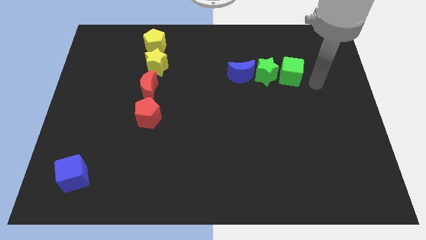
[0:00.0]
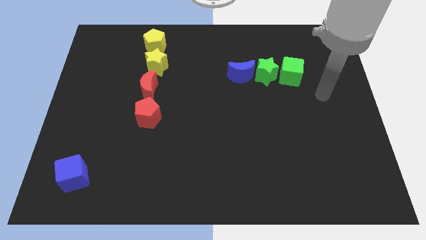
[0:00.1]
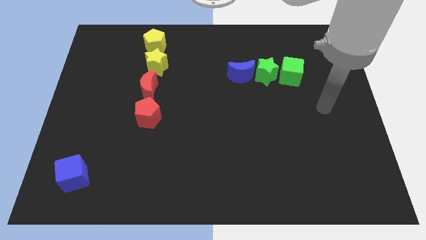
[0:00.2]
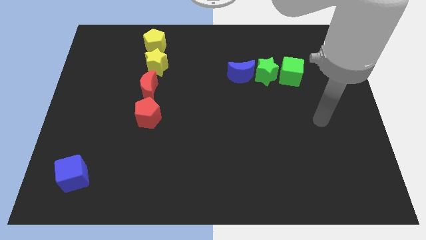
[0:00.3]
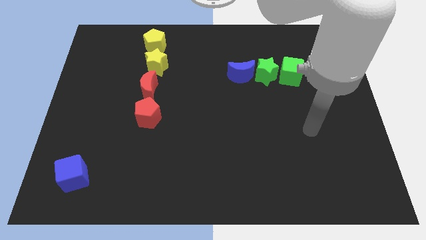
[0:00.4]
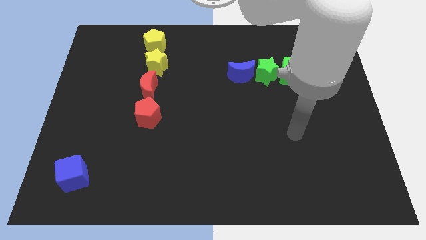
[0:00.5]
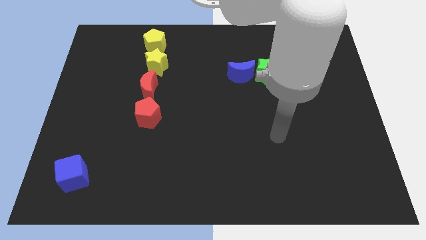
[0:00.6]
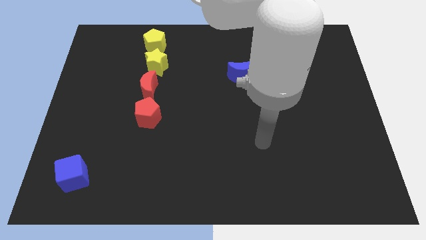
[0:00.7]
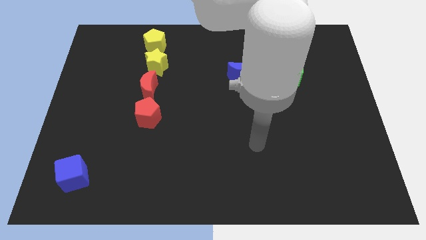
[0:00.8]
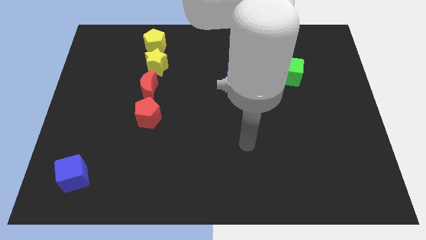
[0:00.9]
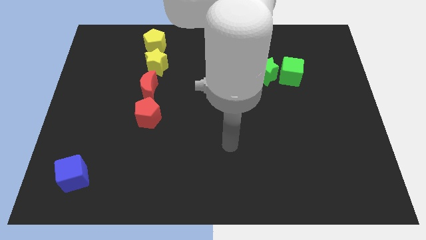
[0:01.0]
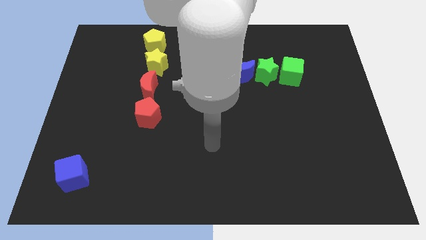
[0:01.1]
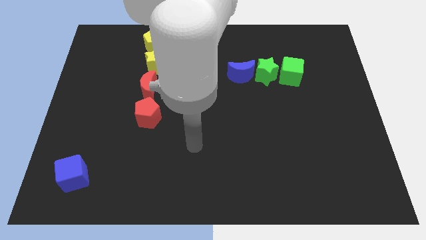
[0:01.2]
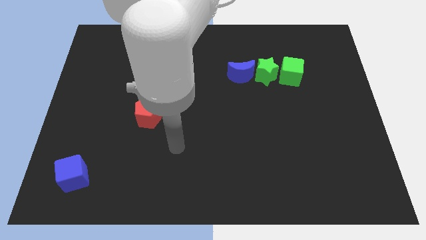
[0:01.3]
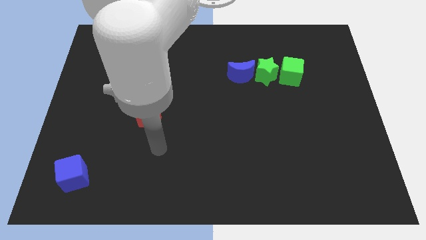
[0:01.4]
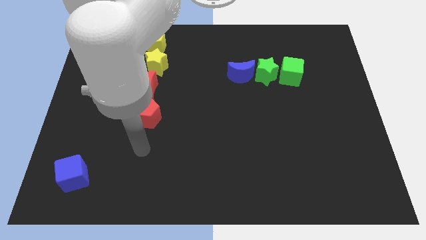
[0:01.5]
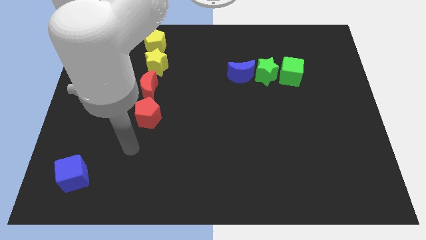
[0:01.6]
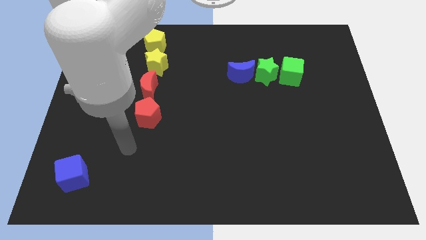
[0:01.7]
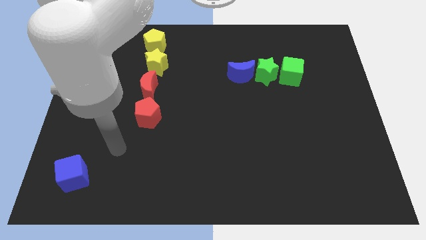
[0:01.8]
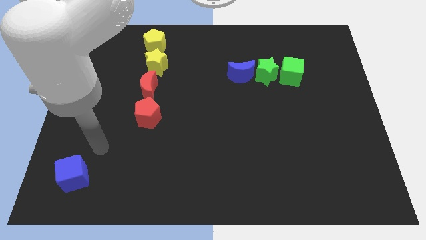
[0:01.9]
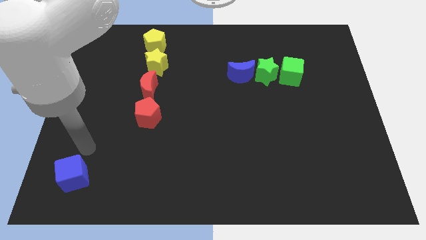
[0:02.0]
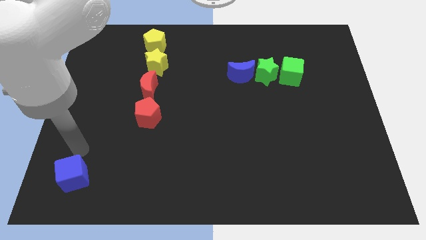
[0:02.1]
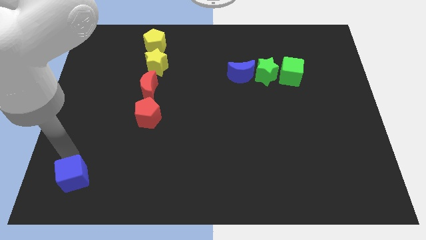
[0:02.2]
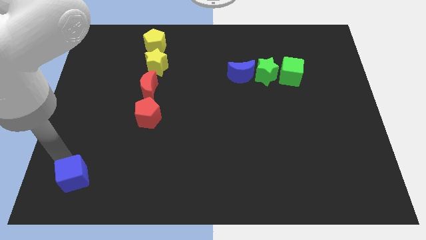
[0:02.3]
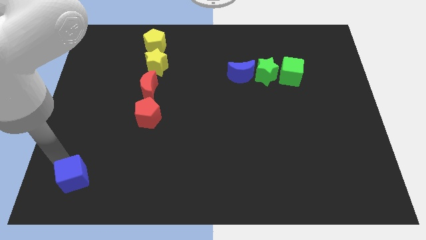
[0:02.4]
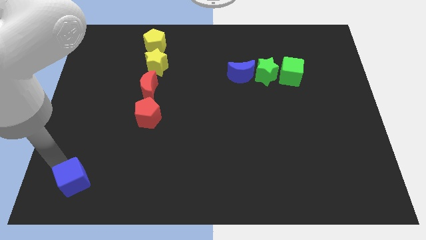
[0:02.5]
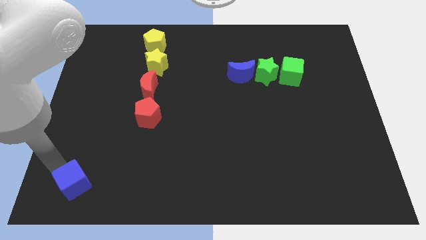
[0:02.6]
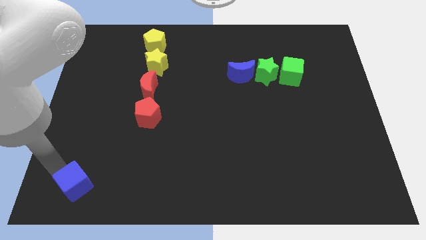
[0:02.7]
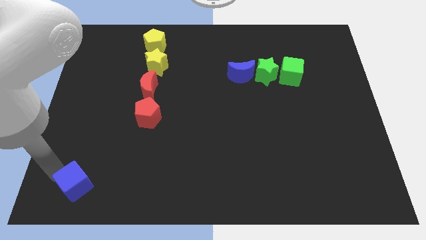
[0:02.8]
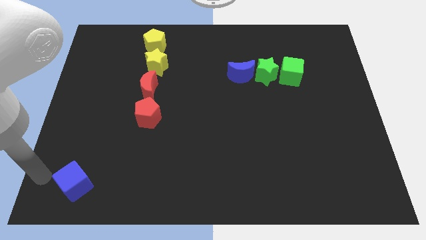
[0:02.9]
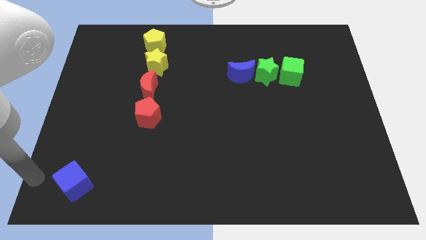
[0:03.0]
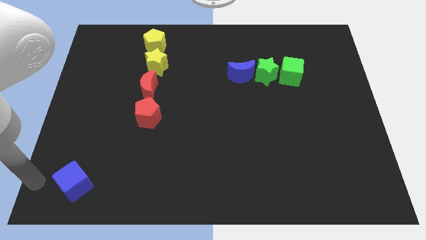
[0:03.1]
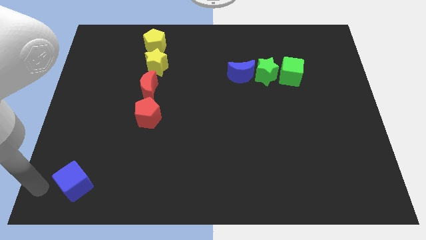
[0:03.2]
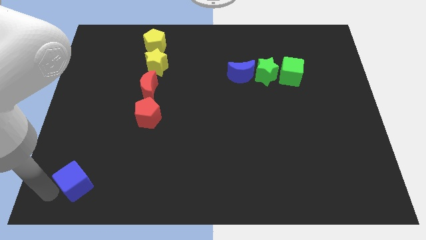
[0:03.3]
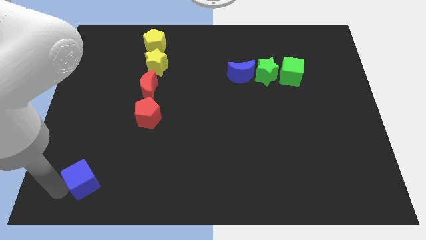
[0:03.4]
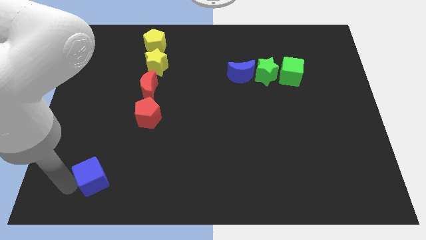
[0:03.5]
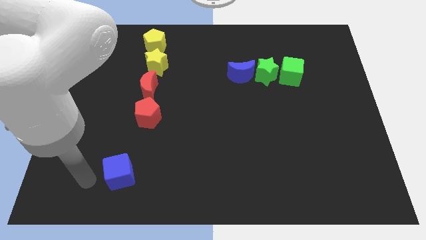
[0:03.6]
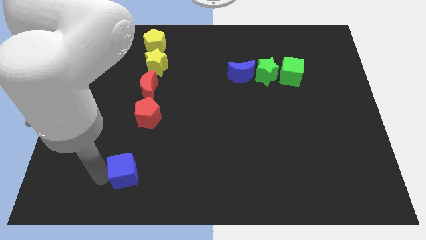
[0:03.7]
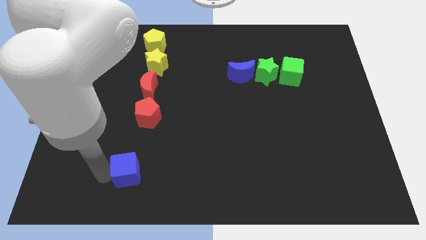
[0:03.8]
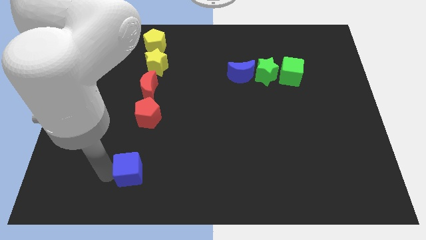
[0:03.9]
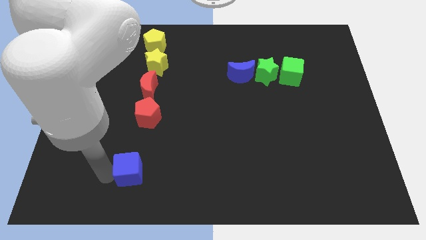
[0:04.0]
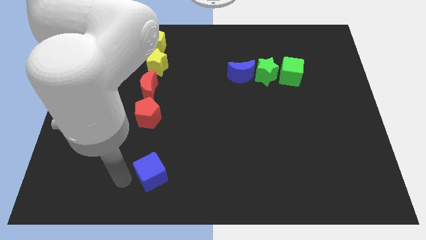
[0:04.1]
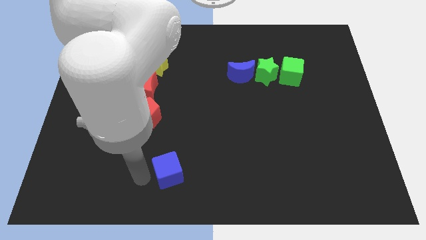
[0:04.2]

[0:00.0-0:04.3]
move the blue cube to the right of the board

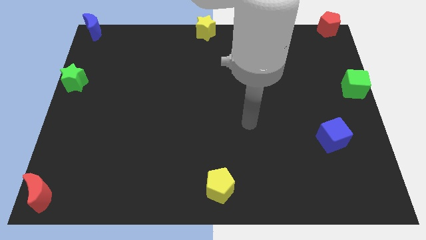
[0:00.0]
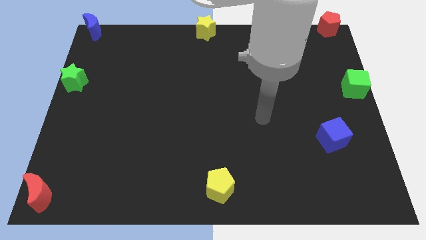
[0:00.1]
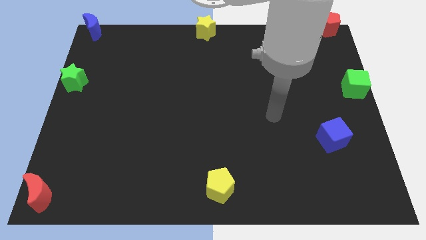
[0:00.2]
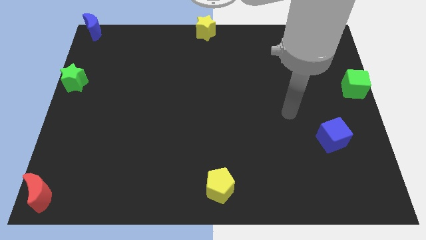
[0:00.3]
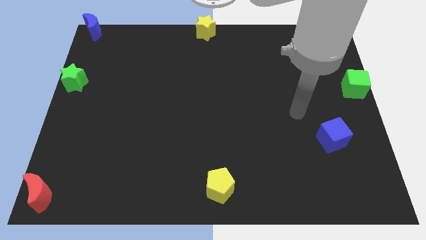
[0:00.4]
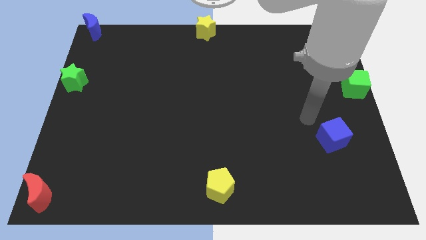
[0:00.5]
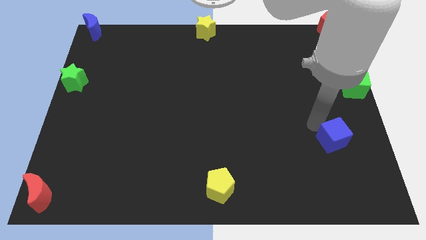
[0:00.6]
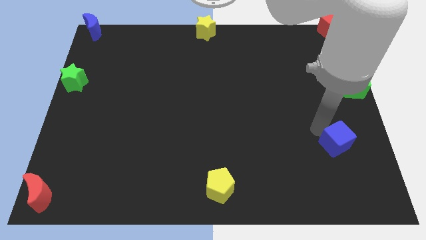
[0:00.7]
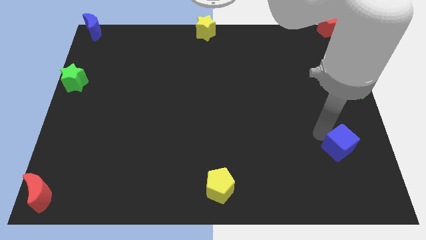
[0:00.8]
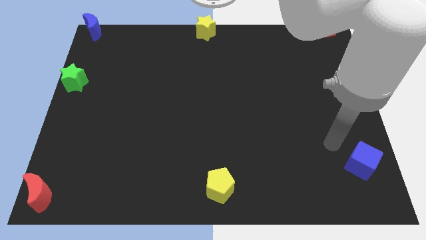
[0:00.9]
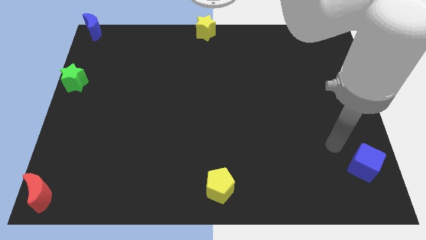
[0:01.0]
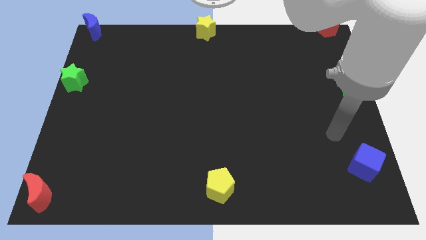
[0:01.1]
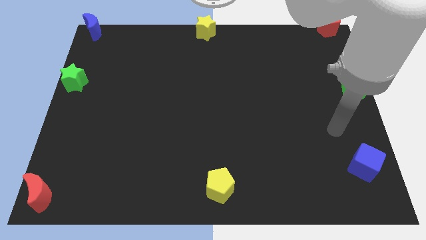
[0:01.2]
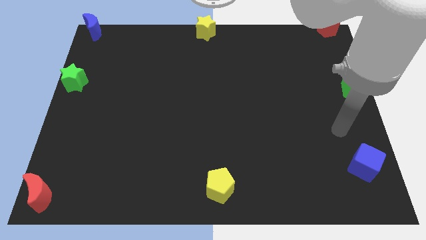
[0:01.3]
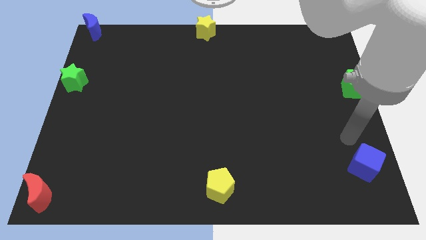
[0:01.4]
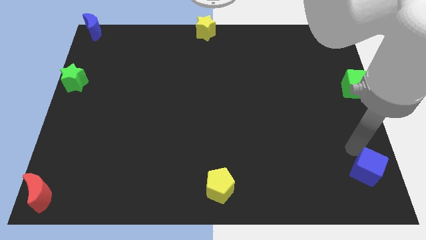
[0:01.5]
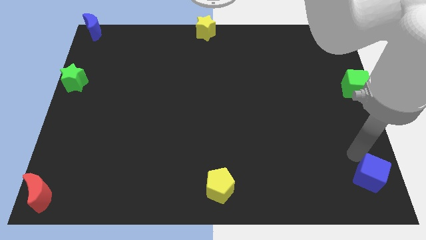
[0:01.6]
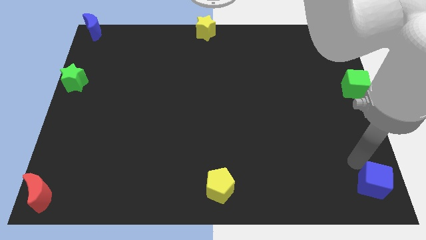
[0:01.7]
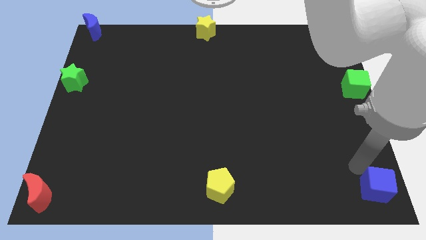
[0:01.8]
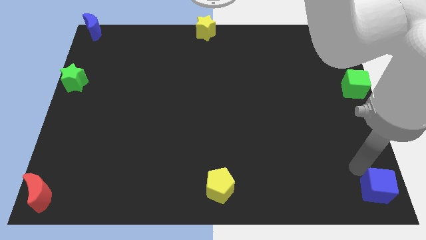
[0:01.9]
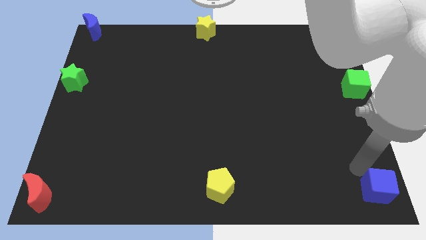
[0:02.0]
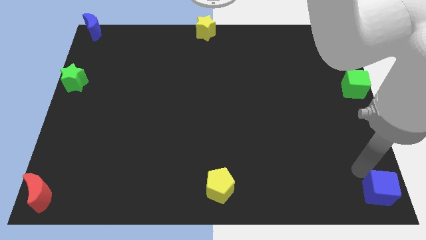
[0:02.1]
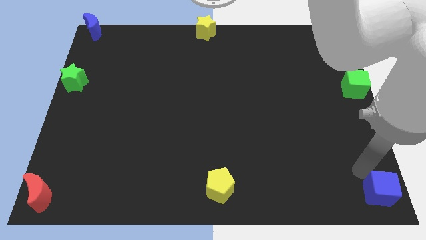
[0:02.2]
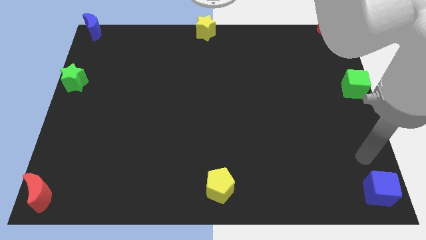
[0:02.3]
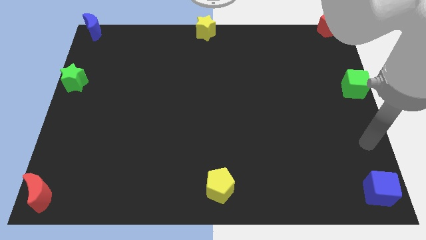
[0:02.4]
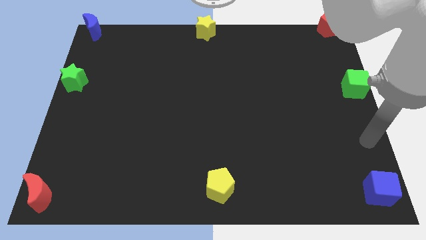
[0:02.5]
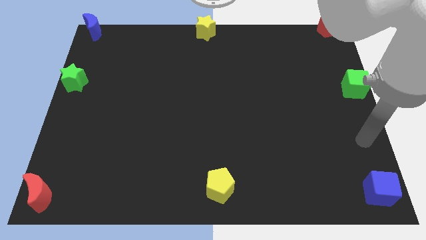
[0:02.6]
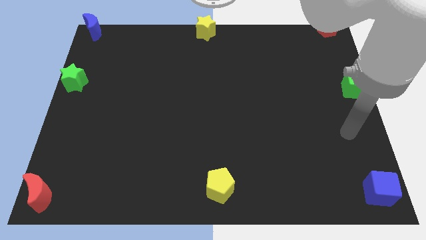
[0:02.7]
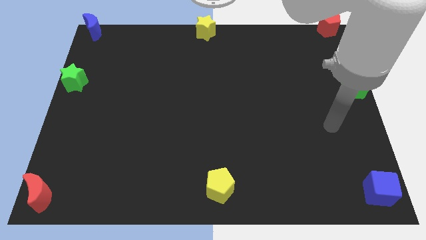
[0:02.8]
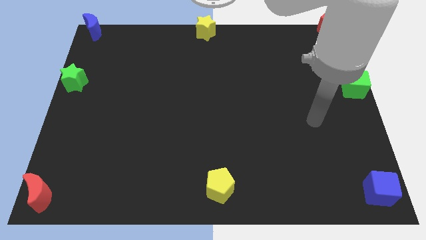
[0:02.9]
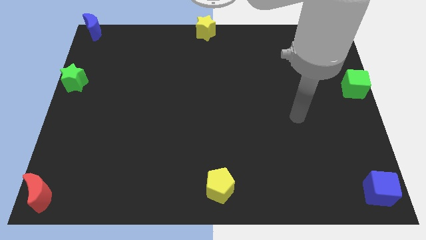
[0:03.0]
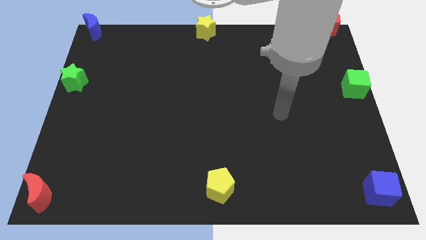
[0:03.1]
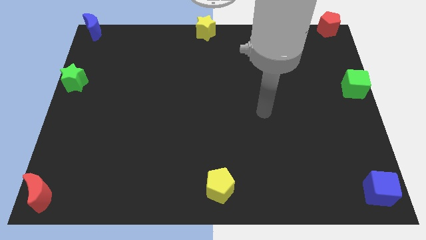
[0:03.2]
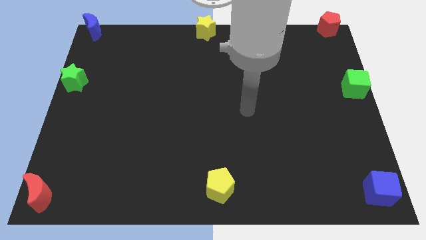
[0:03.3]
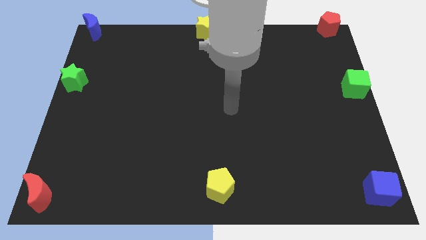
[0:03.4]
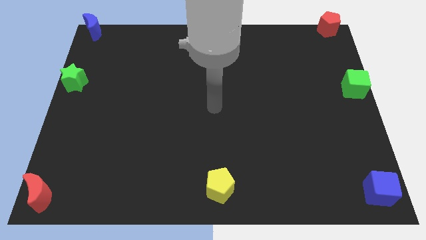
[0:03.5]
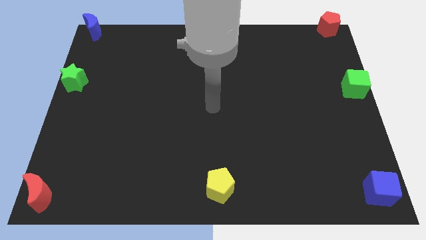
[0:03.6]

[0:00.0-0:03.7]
push the blue cube to the bottom right of the board

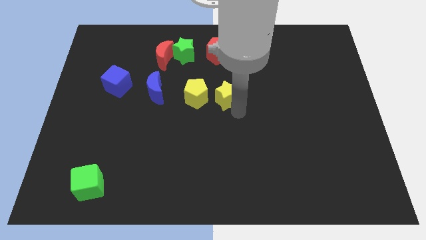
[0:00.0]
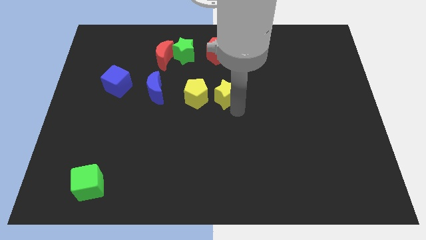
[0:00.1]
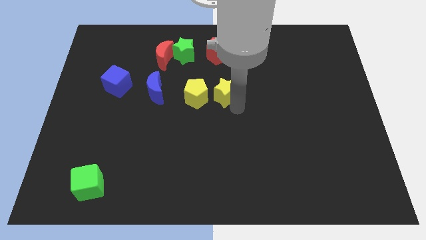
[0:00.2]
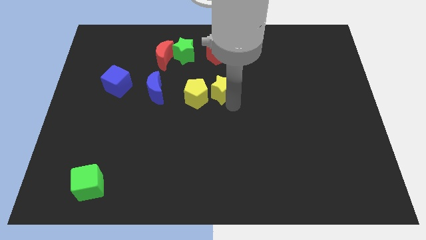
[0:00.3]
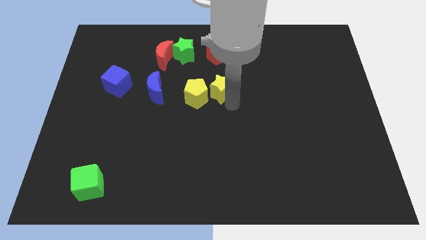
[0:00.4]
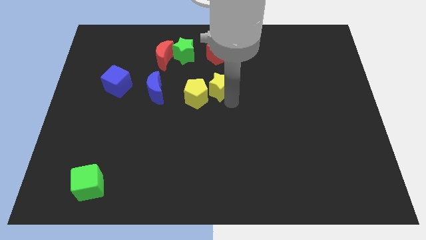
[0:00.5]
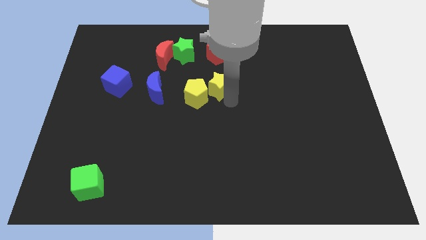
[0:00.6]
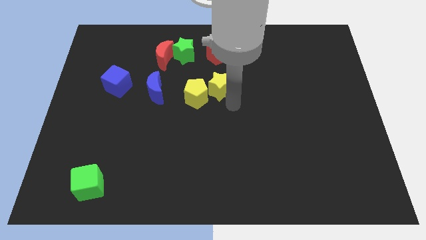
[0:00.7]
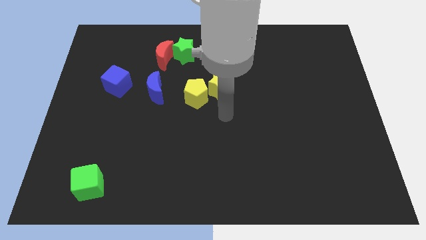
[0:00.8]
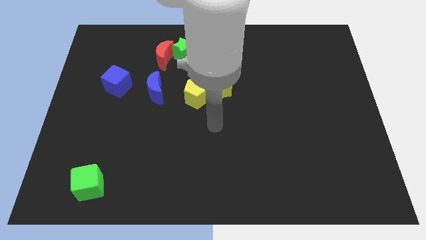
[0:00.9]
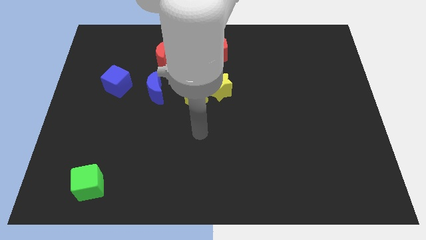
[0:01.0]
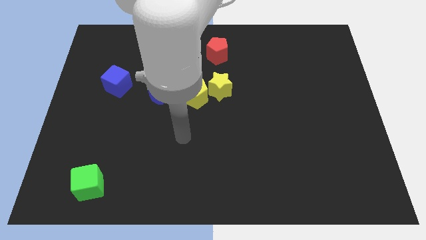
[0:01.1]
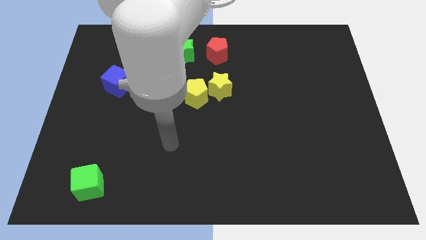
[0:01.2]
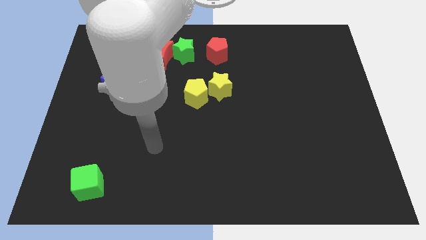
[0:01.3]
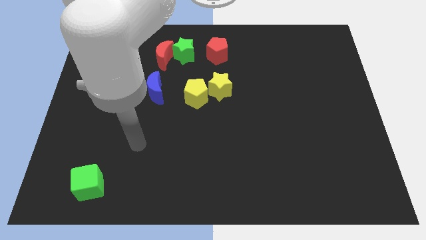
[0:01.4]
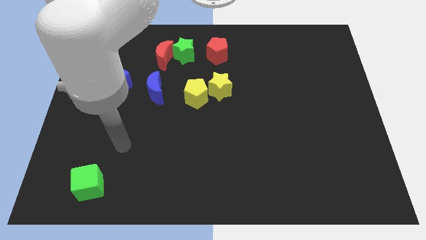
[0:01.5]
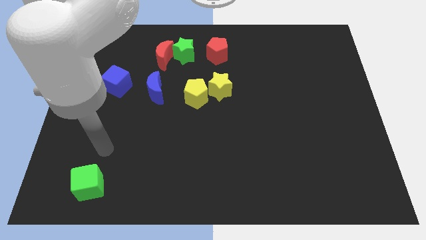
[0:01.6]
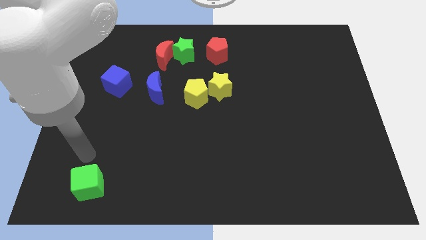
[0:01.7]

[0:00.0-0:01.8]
move the yellow star vertically to the bottom side of the red pentagon
